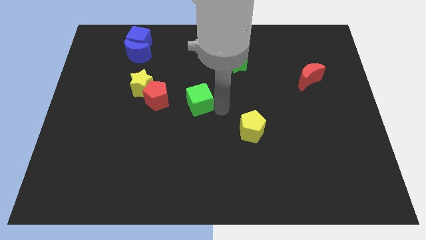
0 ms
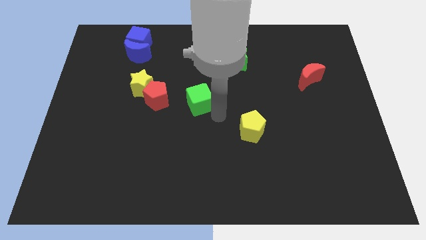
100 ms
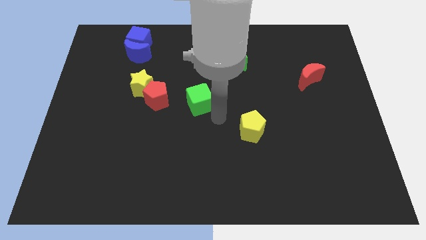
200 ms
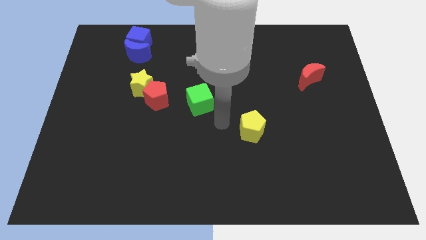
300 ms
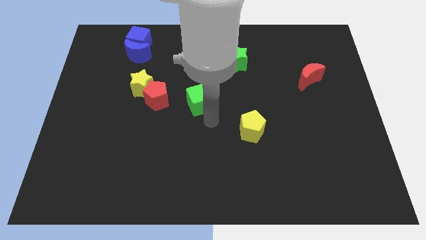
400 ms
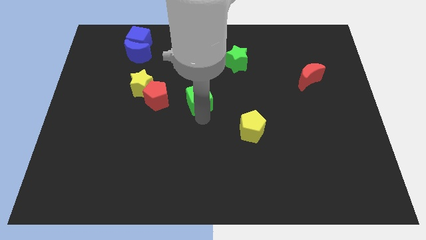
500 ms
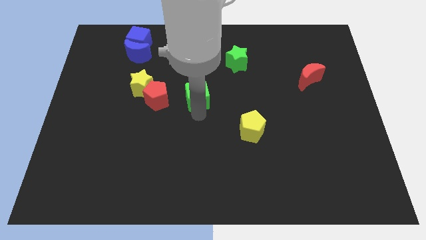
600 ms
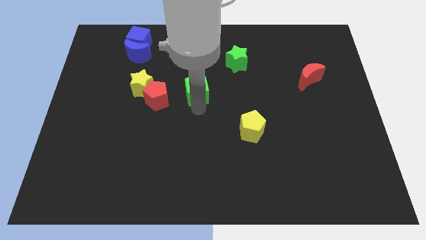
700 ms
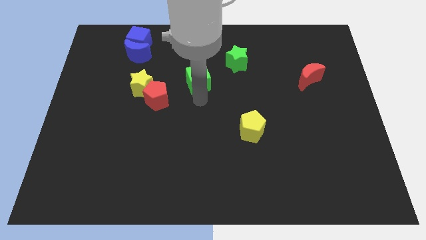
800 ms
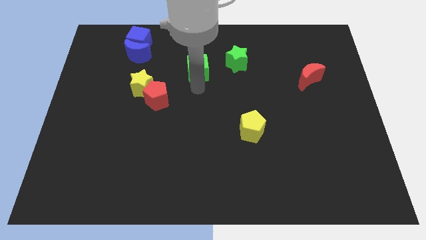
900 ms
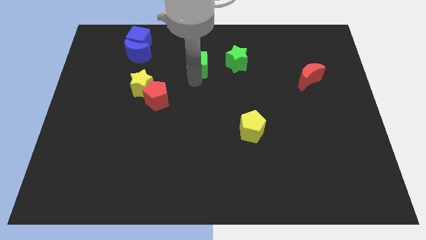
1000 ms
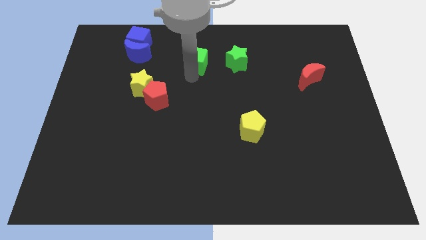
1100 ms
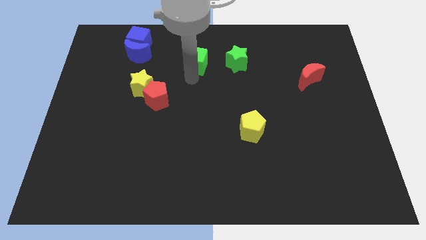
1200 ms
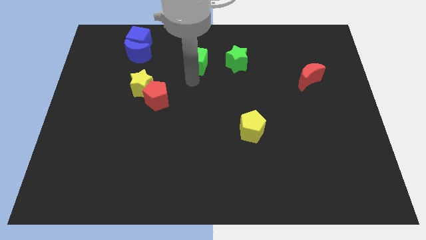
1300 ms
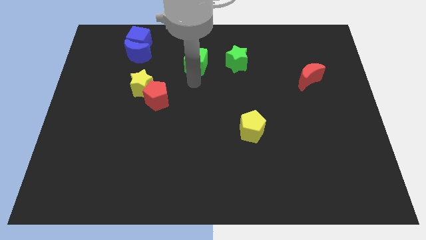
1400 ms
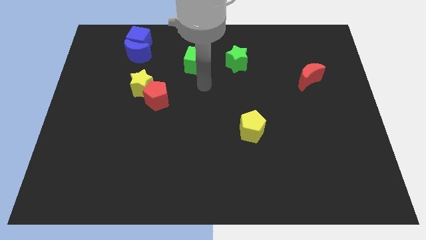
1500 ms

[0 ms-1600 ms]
push the green cube upwards of the board

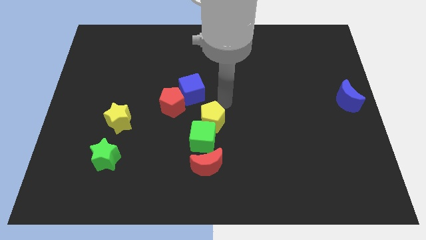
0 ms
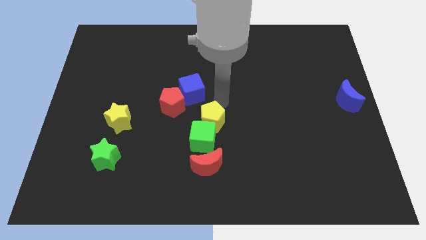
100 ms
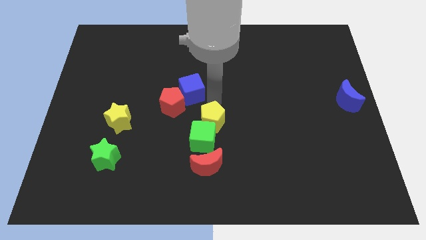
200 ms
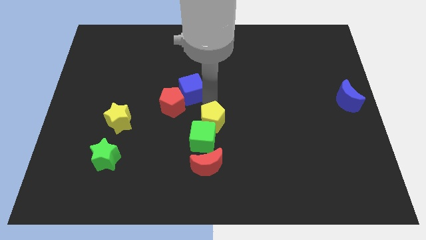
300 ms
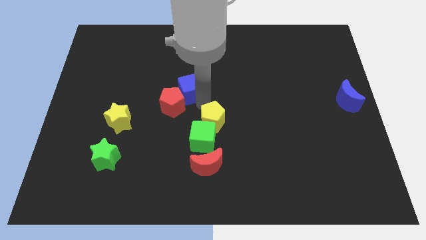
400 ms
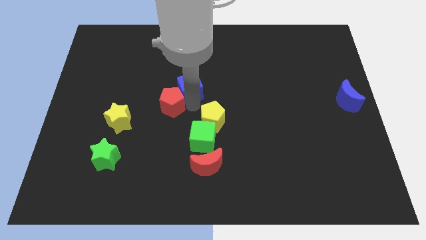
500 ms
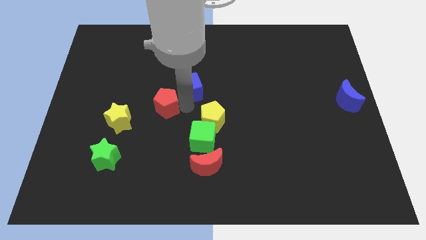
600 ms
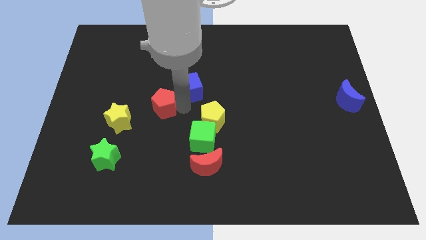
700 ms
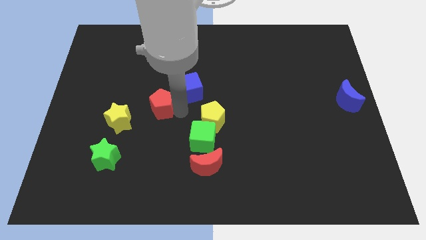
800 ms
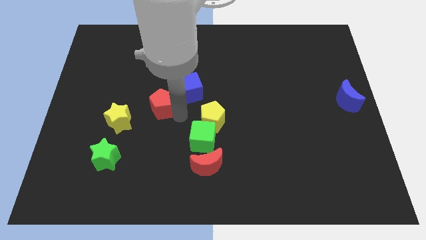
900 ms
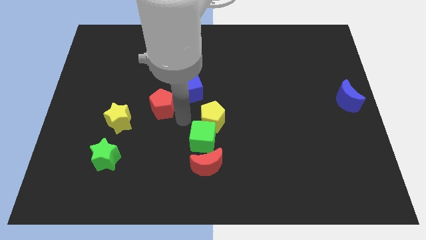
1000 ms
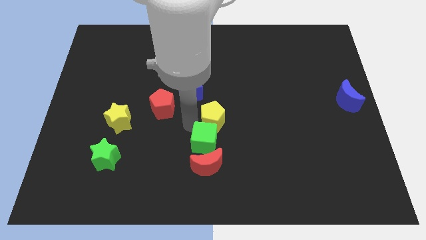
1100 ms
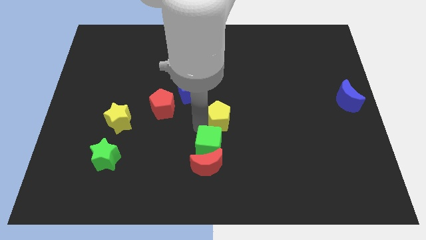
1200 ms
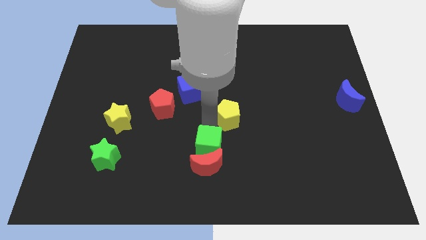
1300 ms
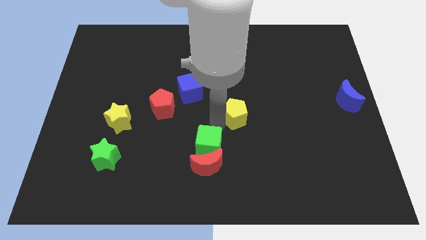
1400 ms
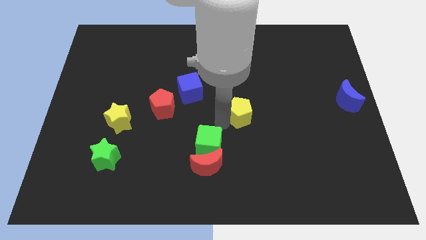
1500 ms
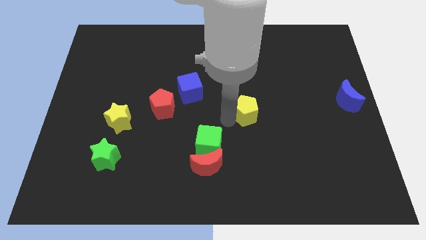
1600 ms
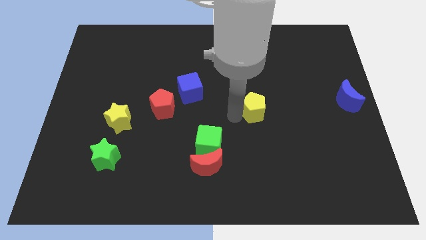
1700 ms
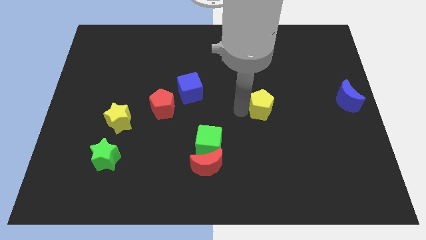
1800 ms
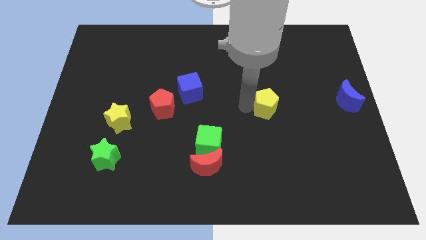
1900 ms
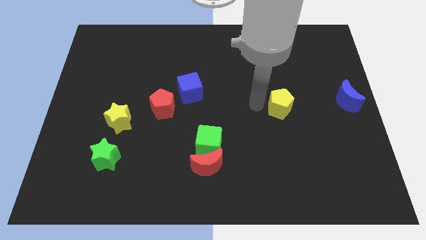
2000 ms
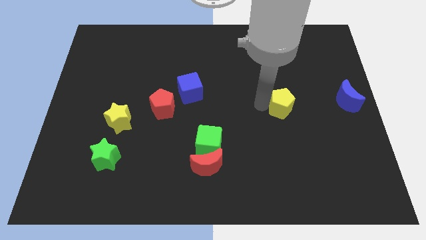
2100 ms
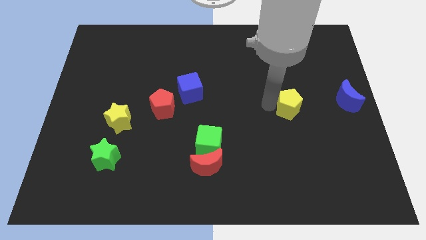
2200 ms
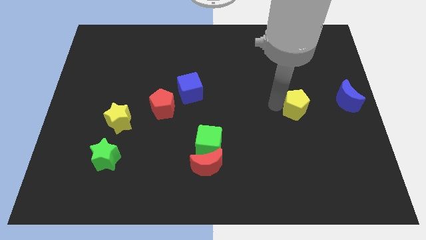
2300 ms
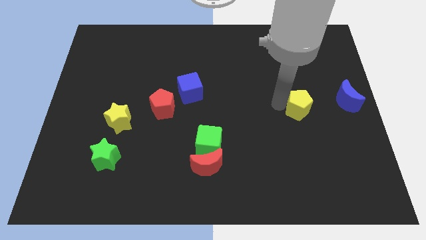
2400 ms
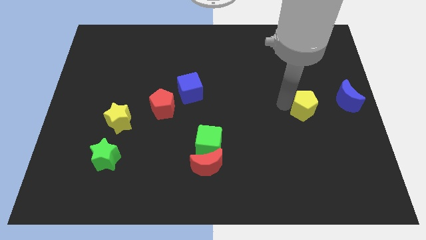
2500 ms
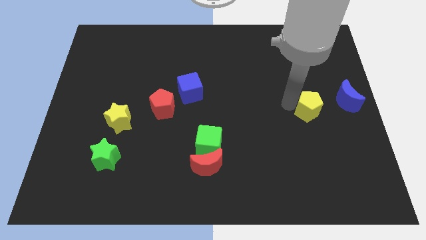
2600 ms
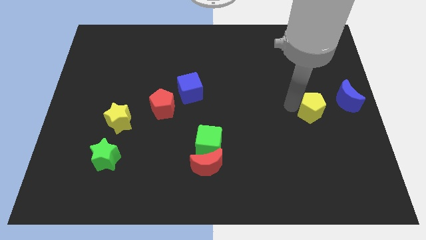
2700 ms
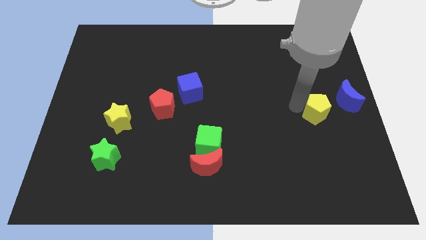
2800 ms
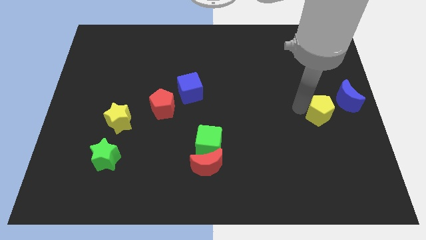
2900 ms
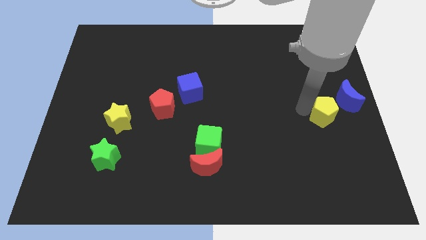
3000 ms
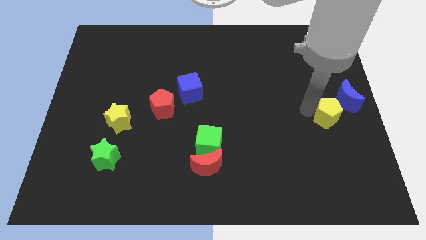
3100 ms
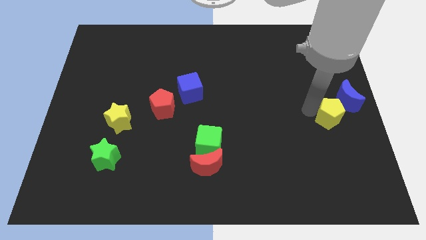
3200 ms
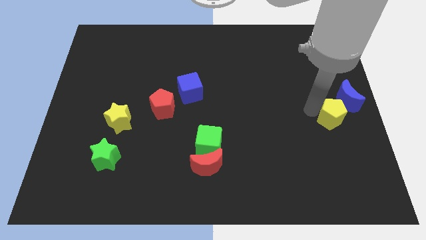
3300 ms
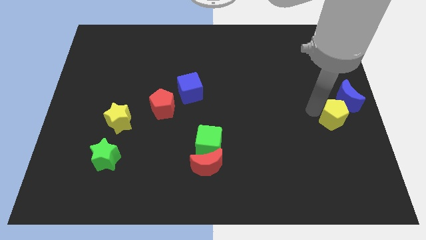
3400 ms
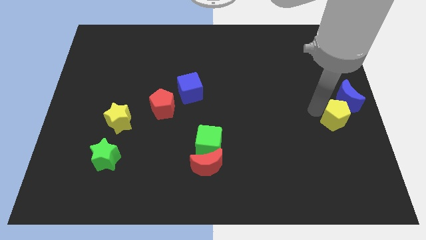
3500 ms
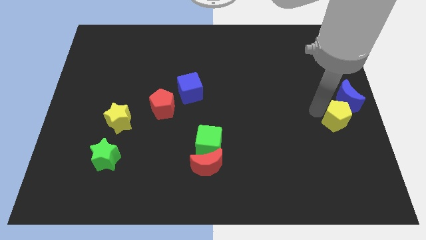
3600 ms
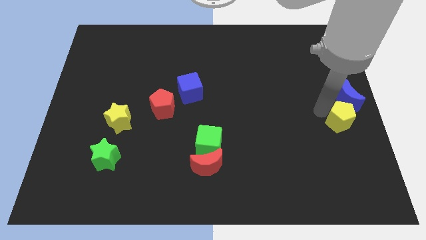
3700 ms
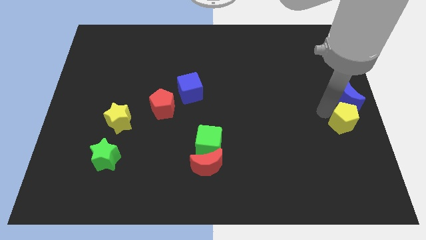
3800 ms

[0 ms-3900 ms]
separate yellow pentagon from the green cube

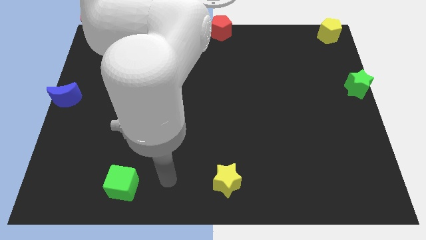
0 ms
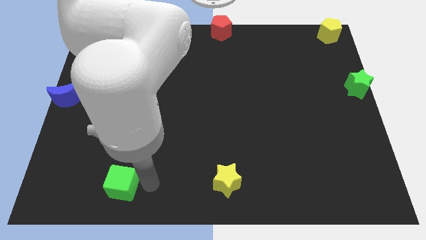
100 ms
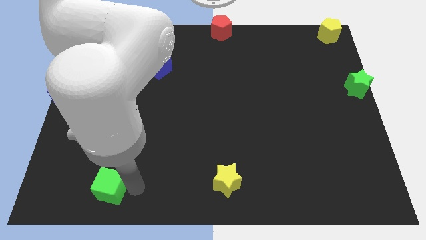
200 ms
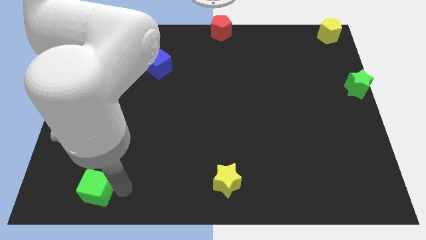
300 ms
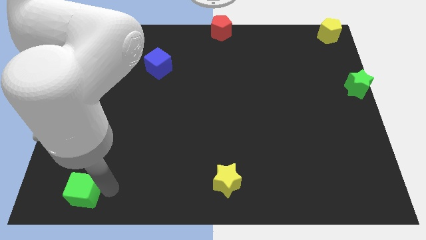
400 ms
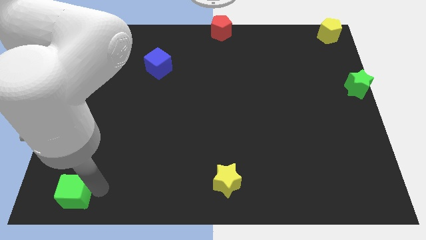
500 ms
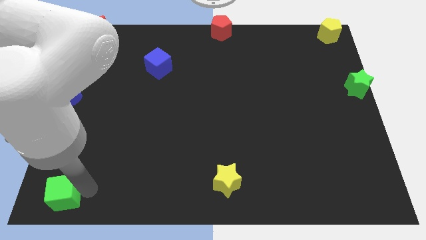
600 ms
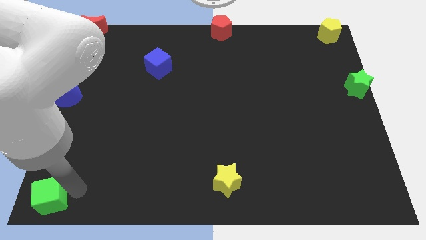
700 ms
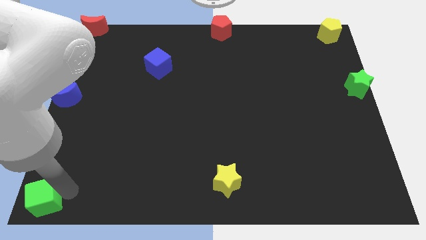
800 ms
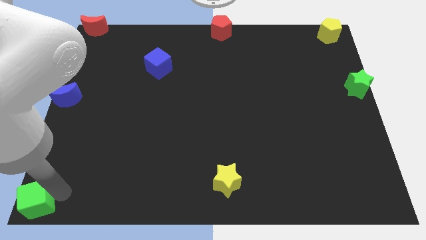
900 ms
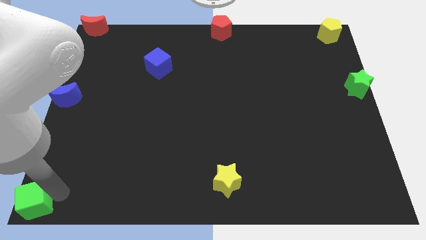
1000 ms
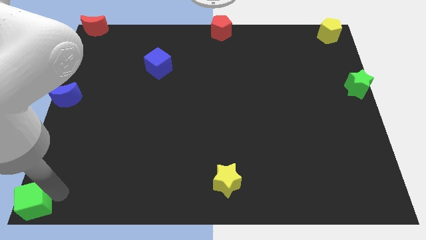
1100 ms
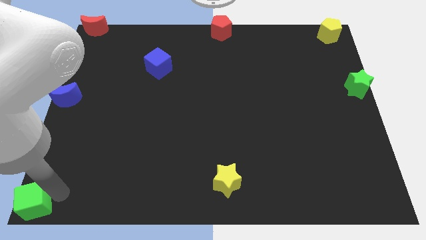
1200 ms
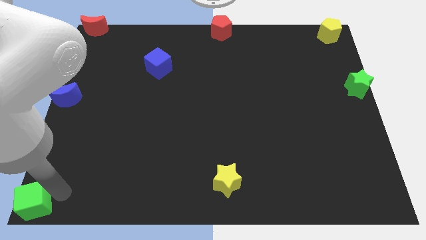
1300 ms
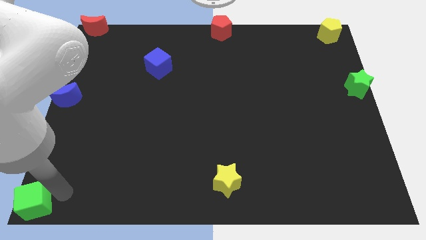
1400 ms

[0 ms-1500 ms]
place the green cube to the bottom left corner

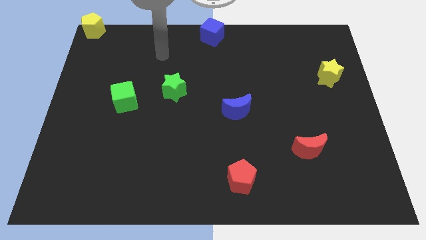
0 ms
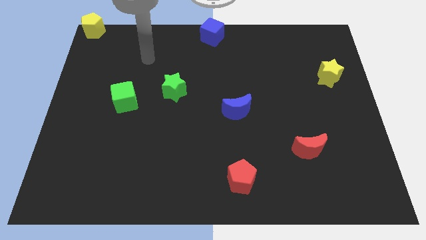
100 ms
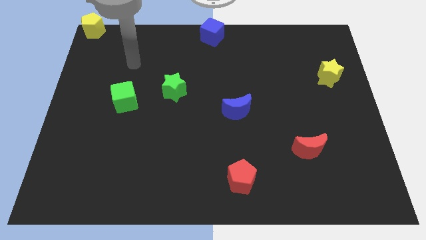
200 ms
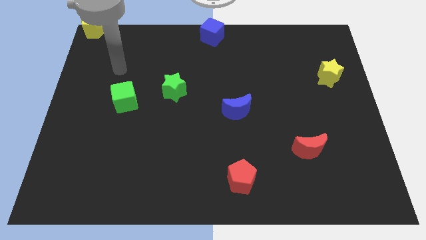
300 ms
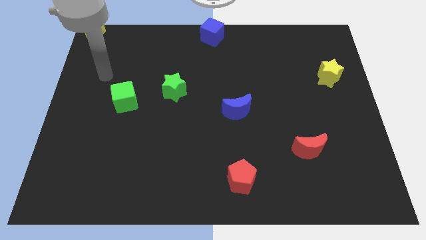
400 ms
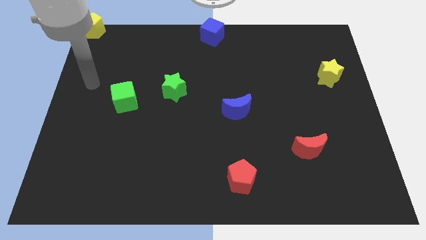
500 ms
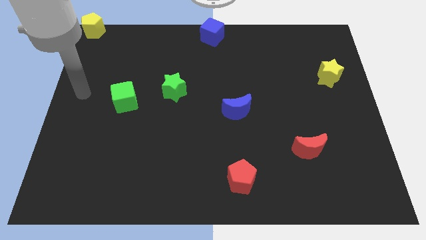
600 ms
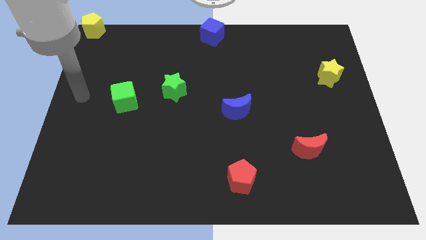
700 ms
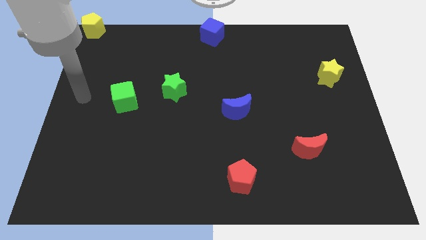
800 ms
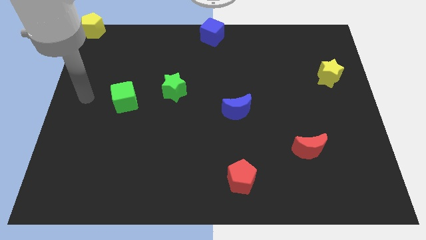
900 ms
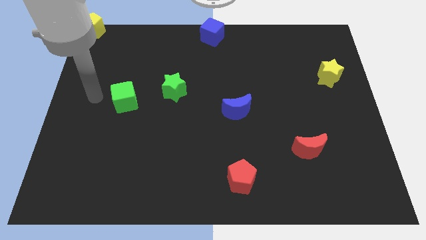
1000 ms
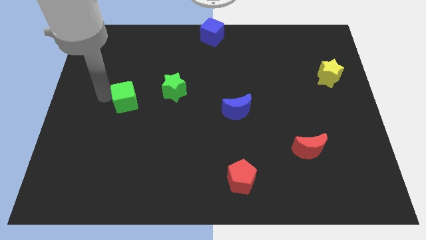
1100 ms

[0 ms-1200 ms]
point your arm to the left side of the green cube

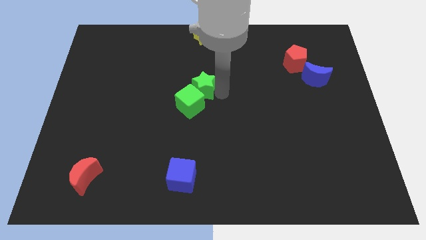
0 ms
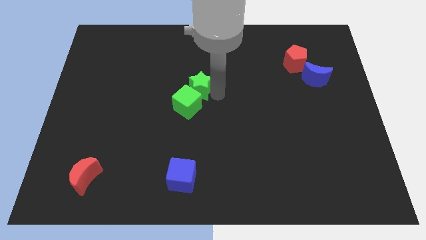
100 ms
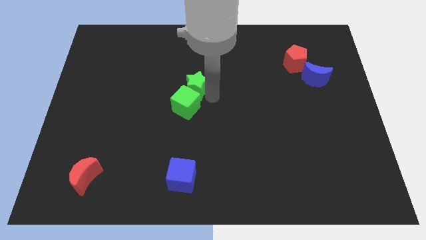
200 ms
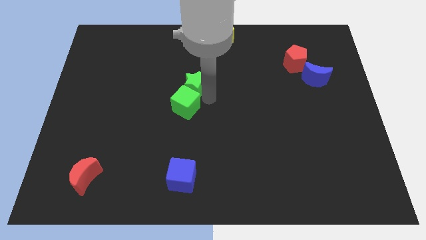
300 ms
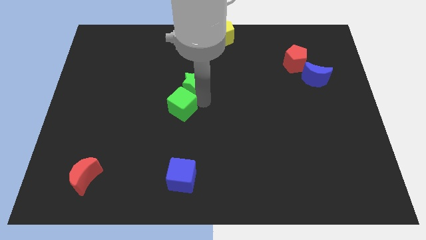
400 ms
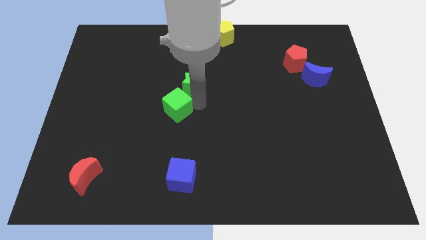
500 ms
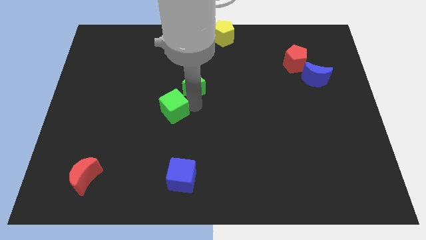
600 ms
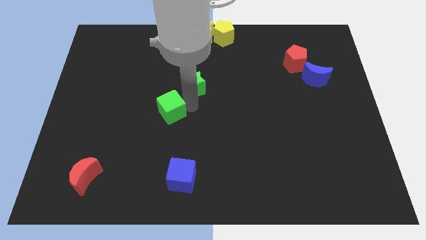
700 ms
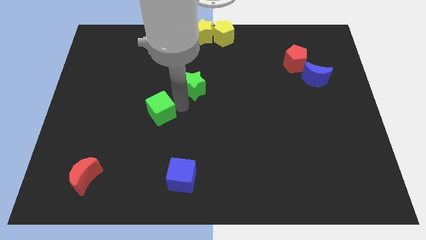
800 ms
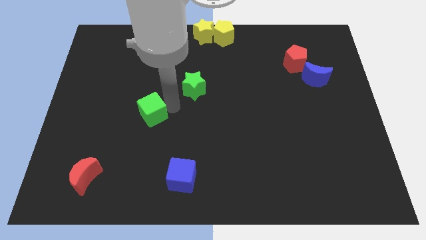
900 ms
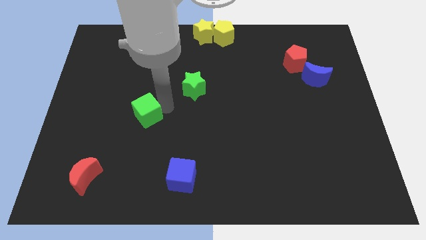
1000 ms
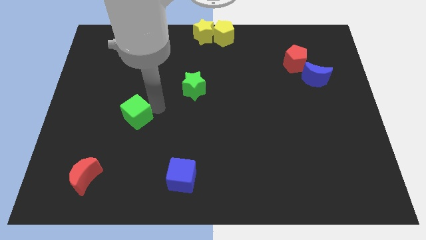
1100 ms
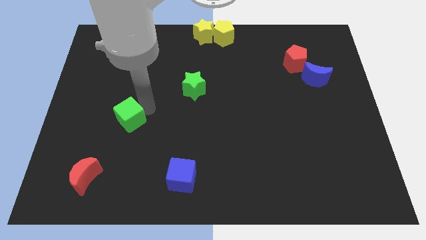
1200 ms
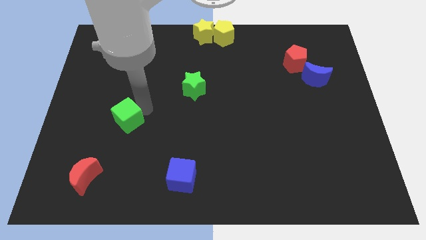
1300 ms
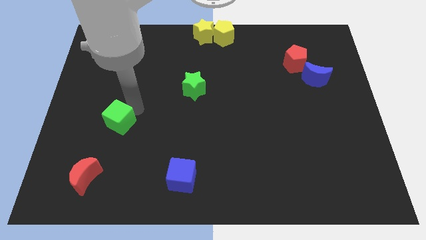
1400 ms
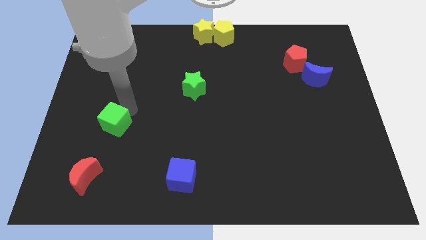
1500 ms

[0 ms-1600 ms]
separate the green blocks
